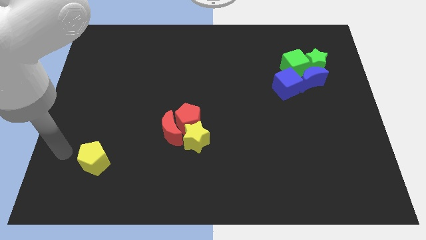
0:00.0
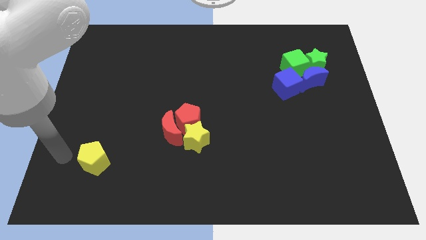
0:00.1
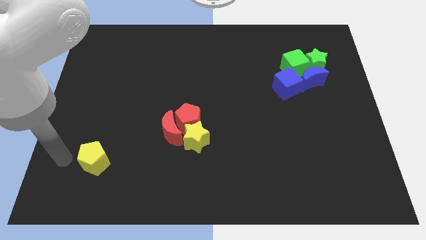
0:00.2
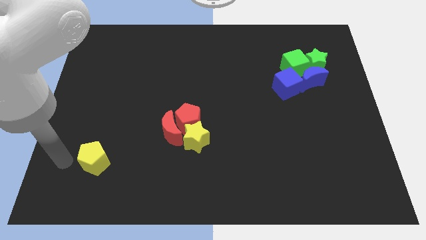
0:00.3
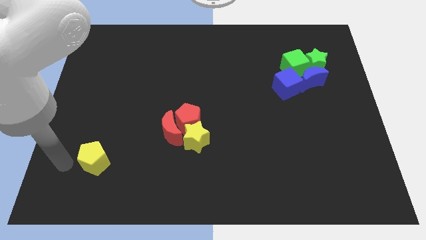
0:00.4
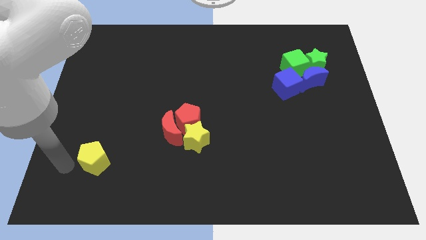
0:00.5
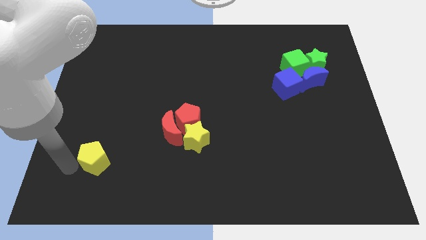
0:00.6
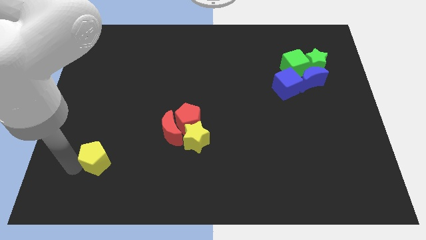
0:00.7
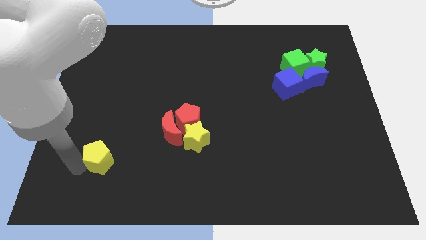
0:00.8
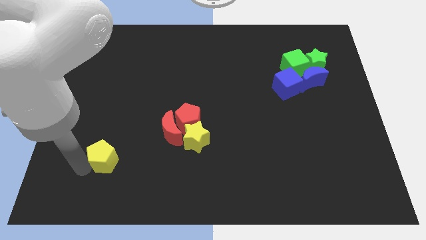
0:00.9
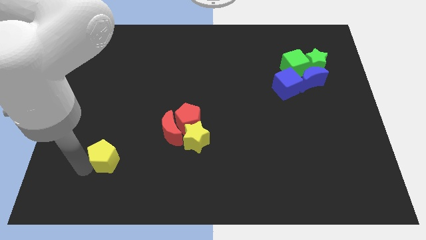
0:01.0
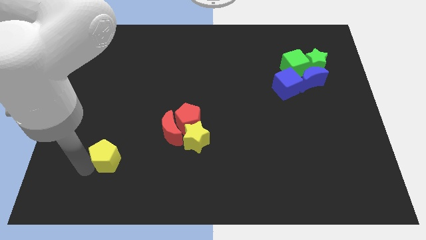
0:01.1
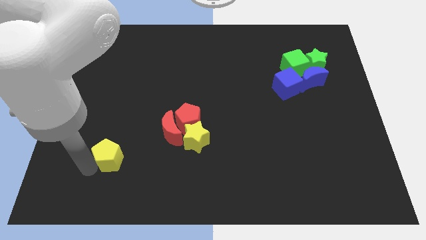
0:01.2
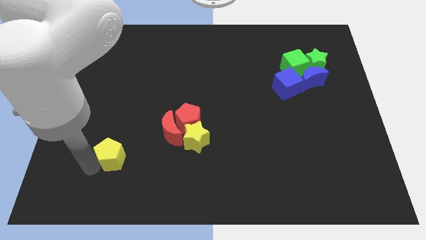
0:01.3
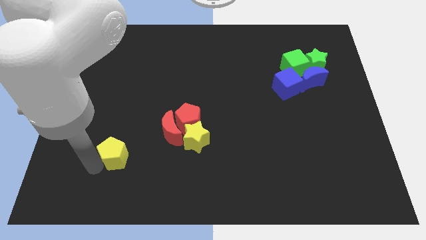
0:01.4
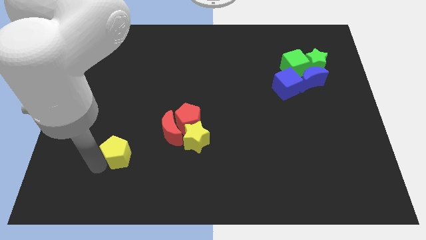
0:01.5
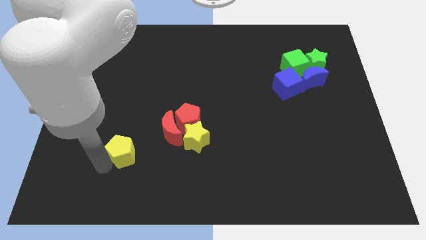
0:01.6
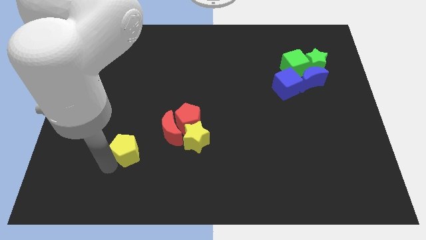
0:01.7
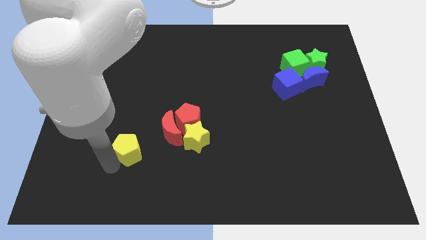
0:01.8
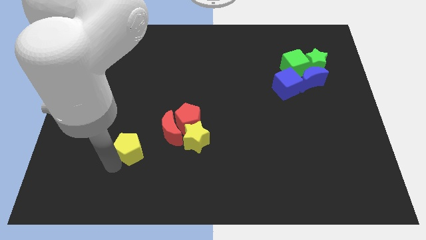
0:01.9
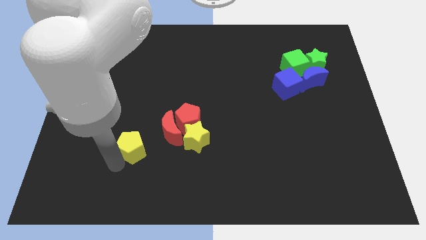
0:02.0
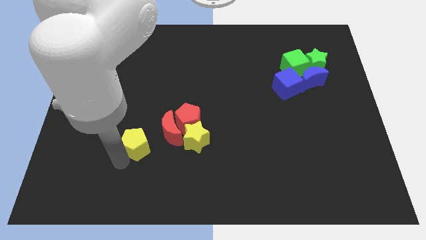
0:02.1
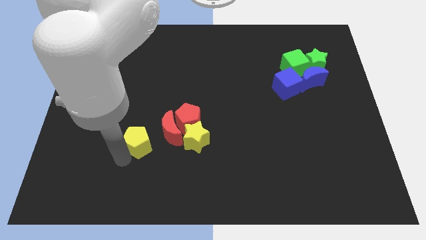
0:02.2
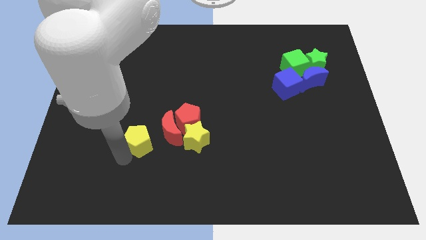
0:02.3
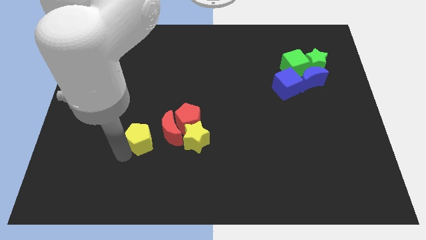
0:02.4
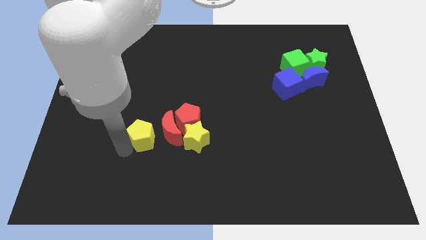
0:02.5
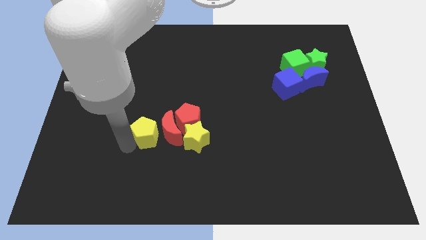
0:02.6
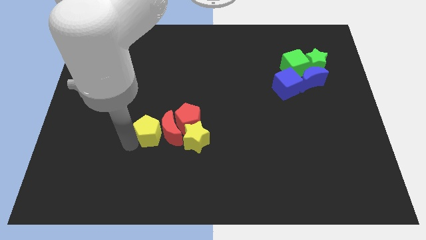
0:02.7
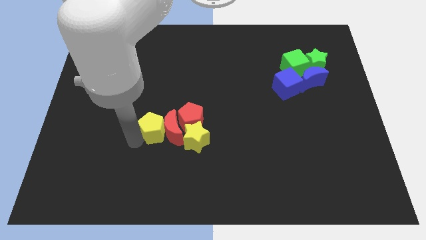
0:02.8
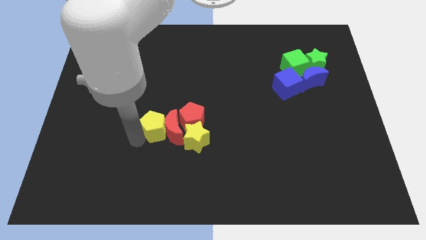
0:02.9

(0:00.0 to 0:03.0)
make the yellow pentagon to touch the red crescent

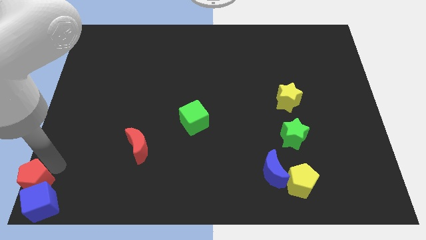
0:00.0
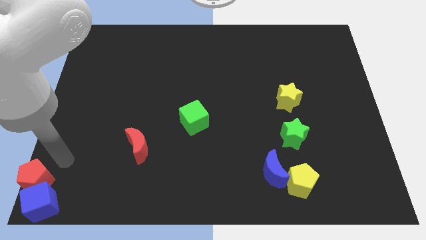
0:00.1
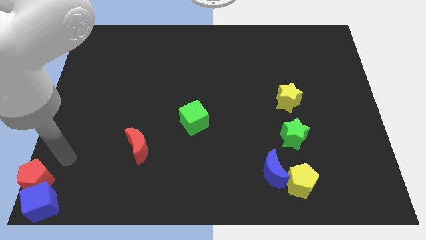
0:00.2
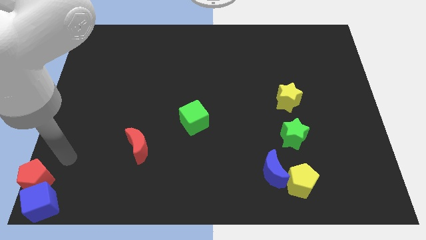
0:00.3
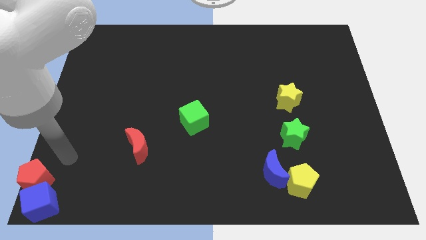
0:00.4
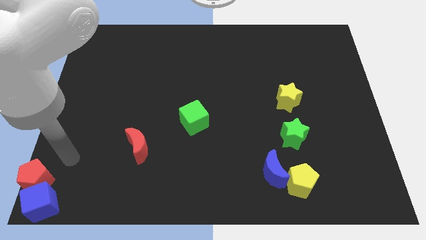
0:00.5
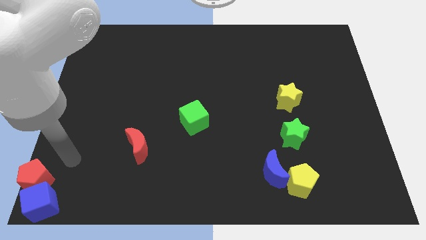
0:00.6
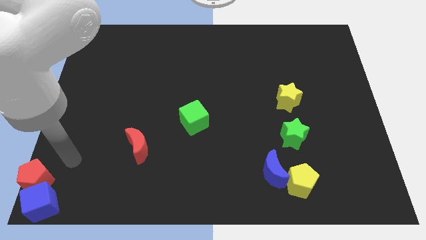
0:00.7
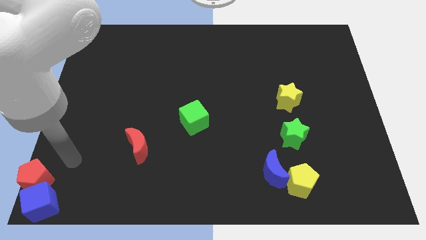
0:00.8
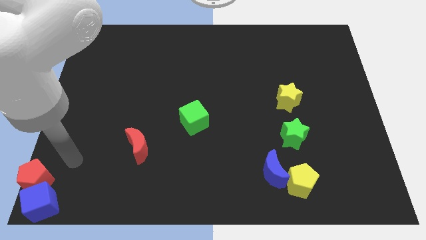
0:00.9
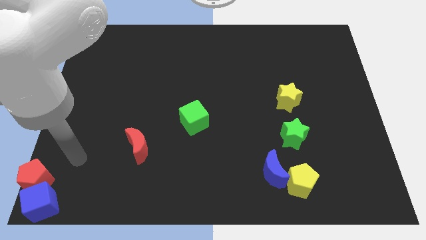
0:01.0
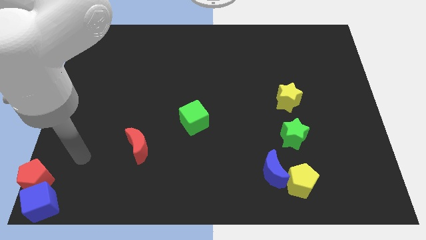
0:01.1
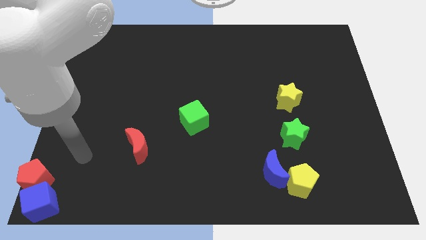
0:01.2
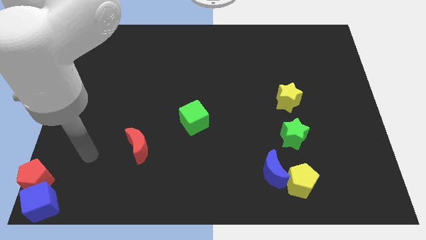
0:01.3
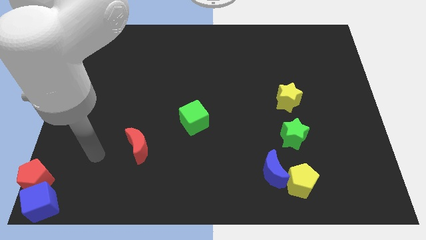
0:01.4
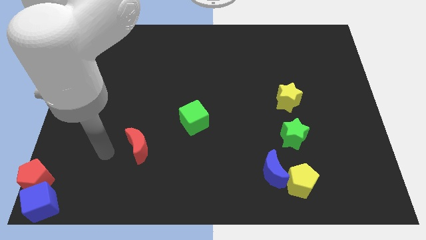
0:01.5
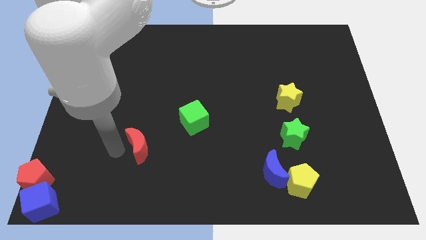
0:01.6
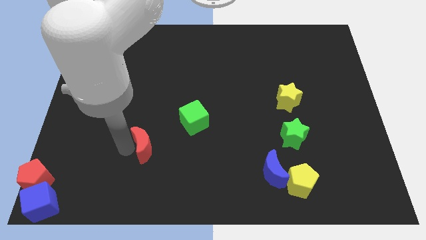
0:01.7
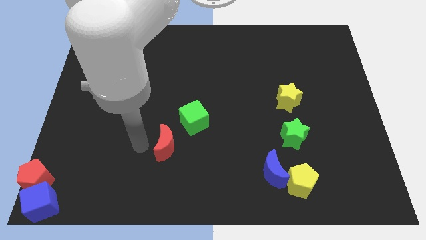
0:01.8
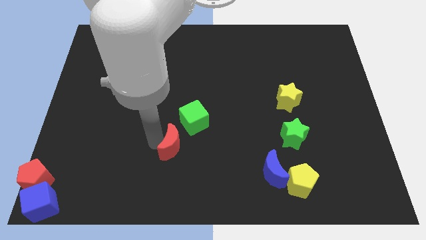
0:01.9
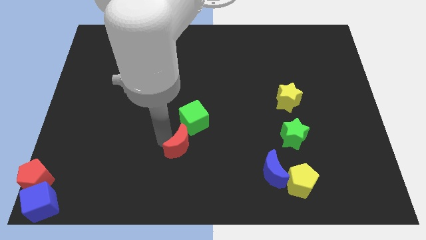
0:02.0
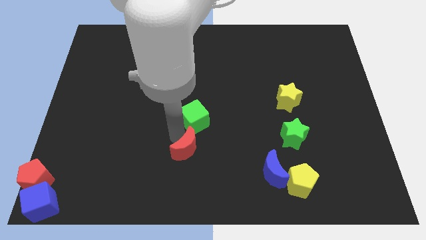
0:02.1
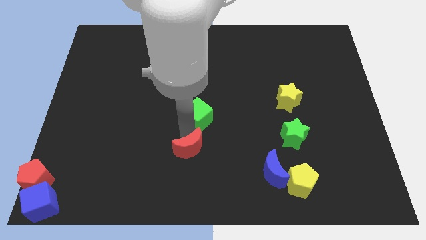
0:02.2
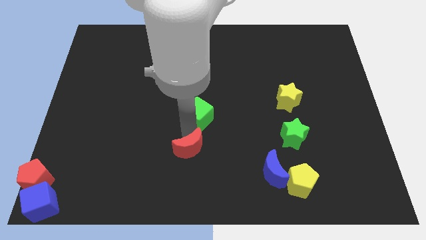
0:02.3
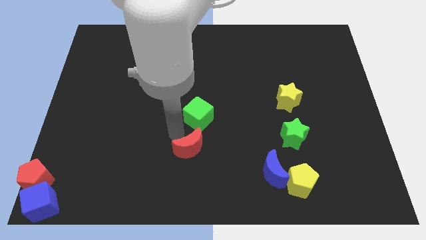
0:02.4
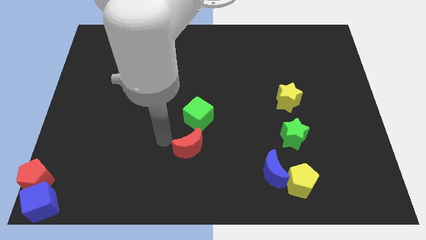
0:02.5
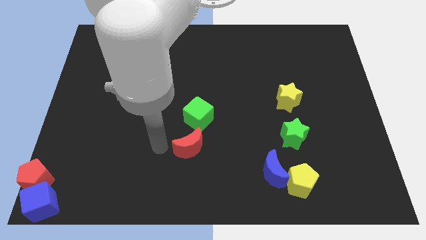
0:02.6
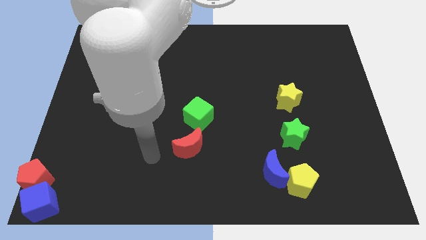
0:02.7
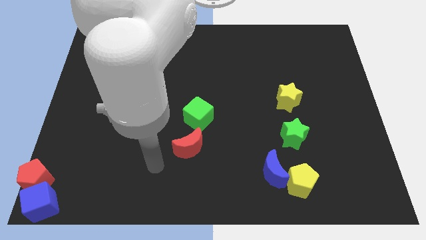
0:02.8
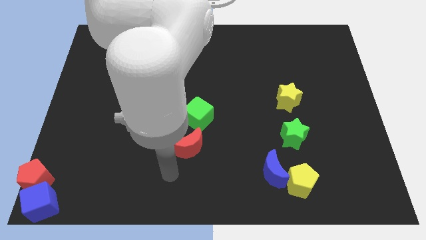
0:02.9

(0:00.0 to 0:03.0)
move the red crescent to the bottom of the green cube

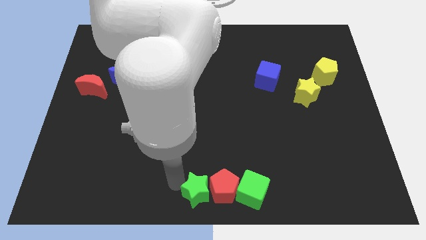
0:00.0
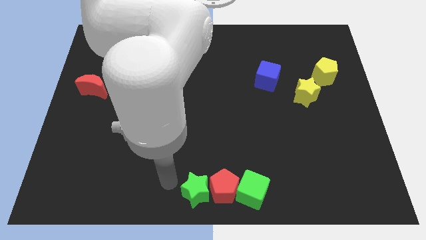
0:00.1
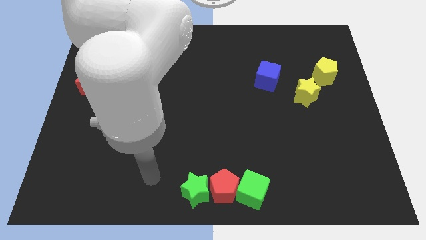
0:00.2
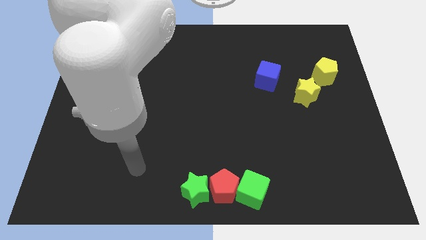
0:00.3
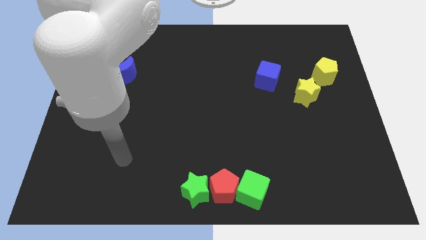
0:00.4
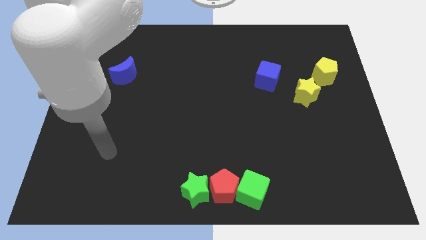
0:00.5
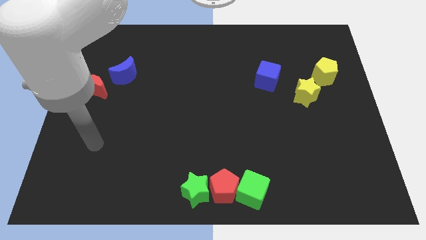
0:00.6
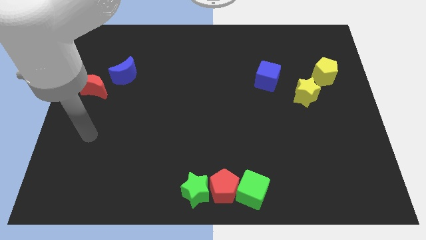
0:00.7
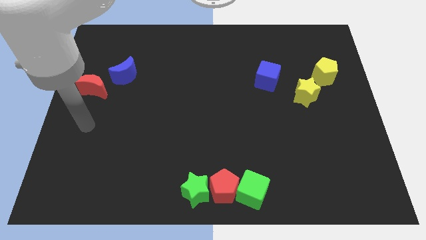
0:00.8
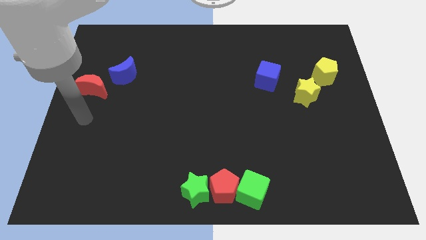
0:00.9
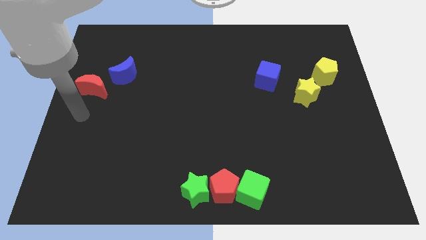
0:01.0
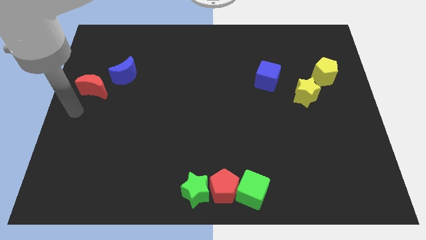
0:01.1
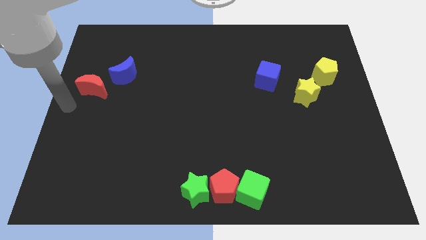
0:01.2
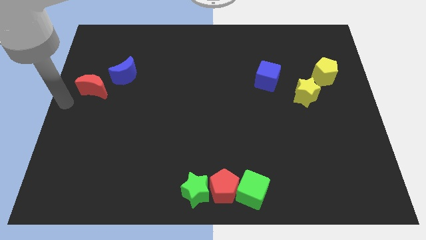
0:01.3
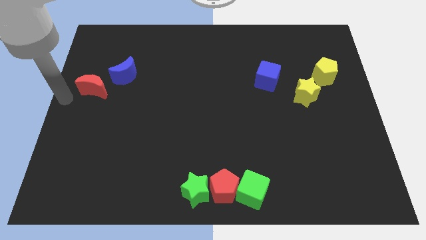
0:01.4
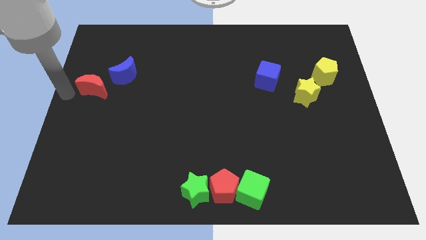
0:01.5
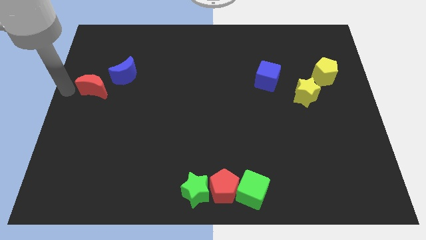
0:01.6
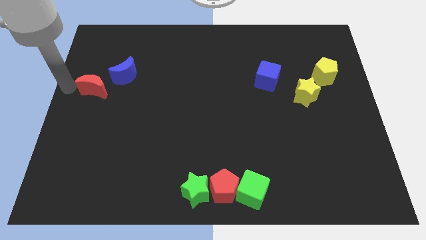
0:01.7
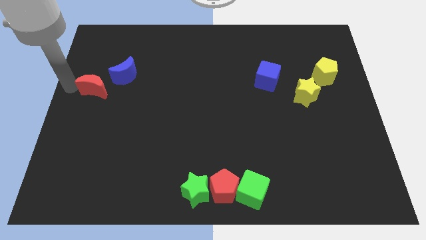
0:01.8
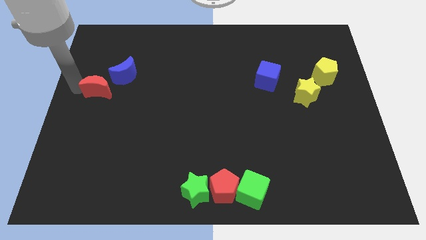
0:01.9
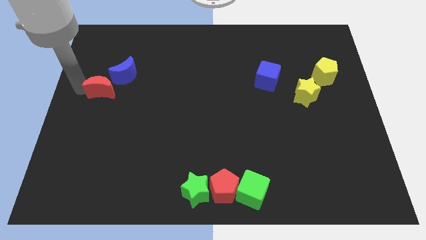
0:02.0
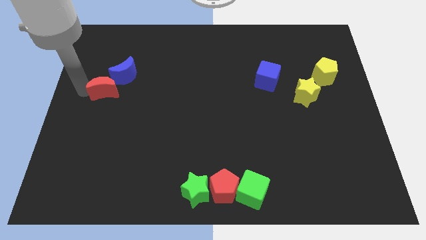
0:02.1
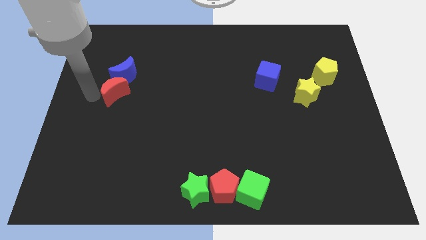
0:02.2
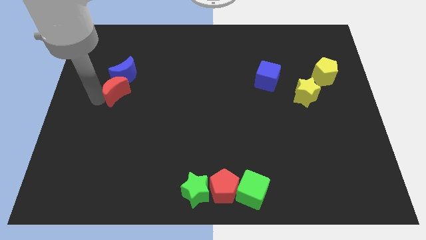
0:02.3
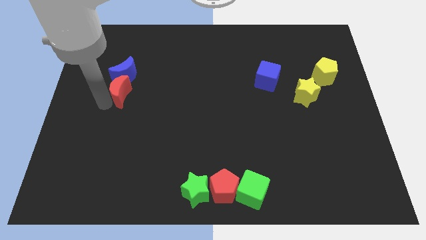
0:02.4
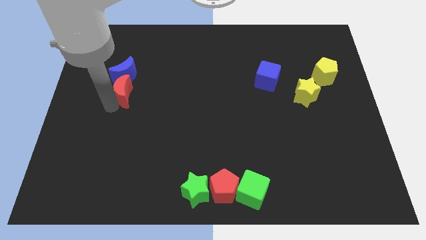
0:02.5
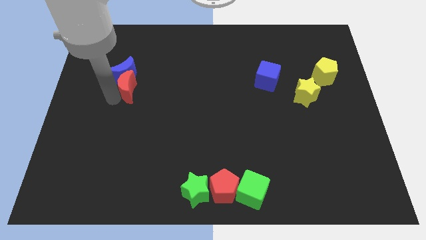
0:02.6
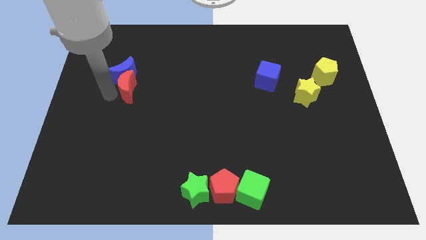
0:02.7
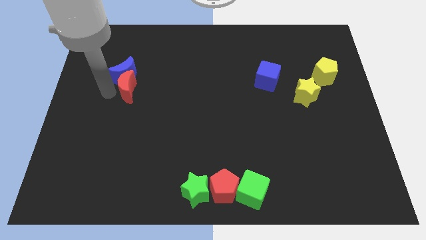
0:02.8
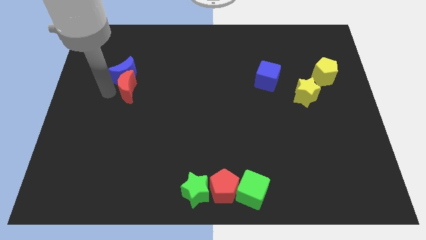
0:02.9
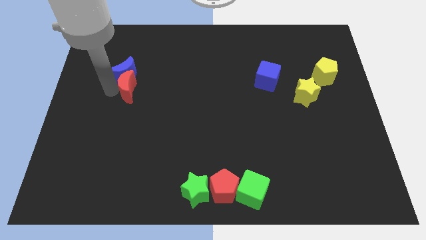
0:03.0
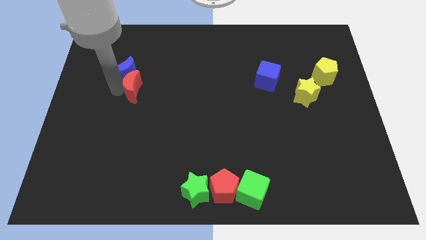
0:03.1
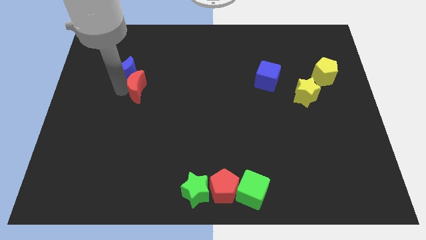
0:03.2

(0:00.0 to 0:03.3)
put the red crescent below the blue crescent
